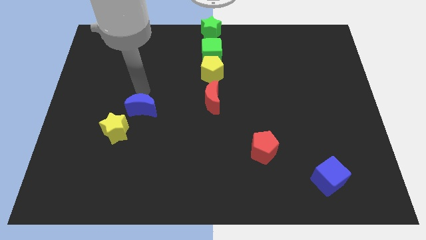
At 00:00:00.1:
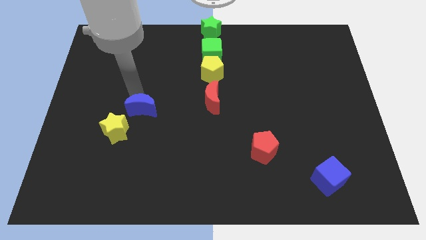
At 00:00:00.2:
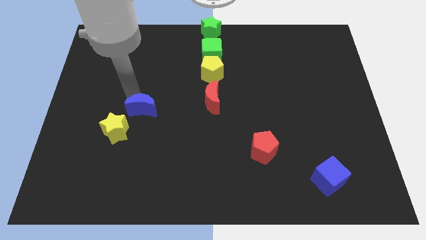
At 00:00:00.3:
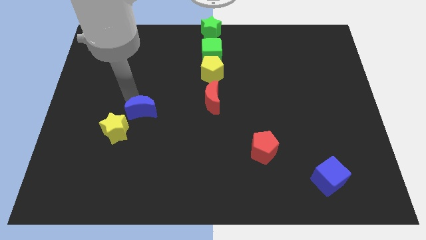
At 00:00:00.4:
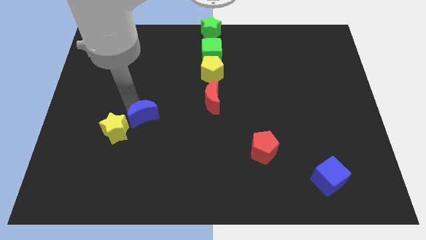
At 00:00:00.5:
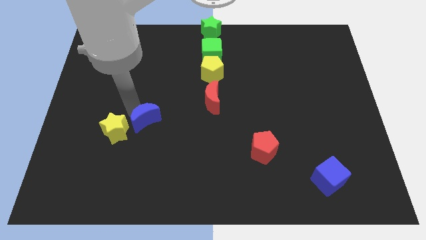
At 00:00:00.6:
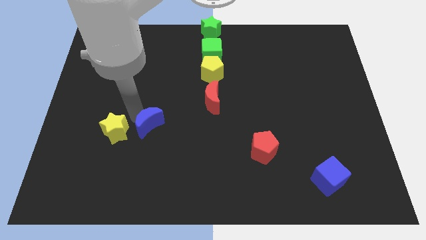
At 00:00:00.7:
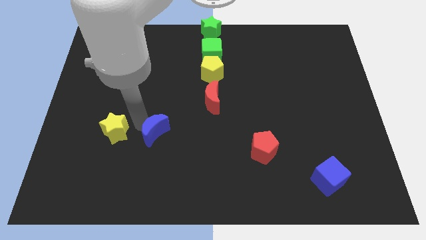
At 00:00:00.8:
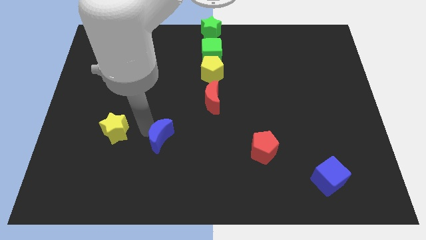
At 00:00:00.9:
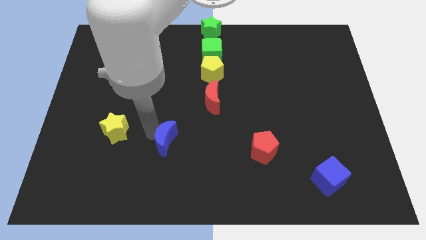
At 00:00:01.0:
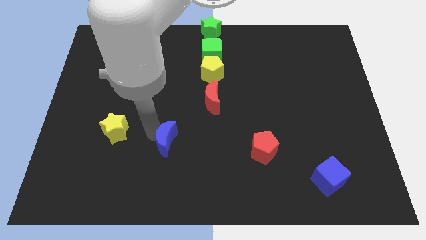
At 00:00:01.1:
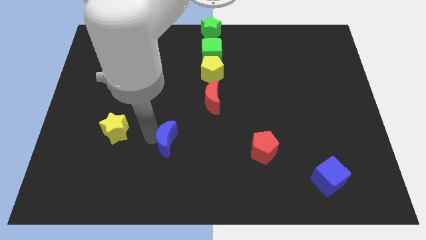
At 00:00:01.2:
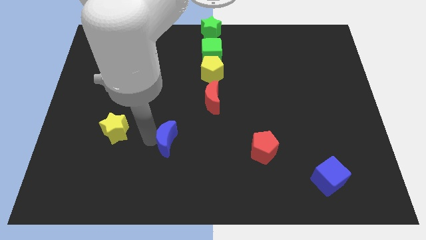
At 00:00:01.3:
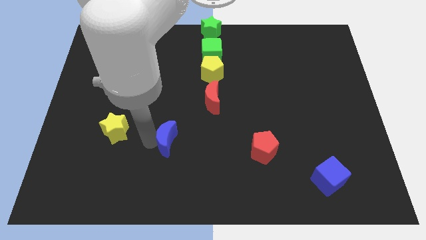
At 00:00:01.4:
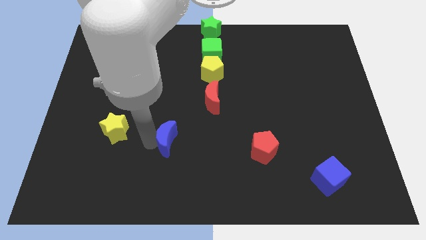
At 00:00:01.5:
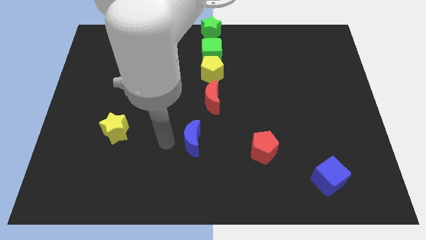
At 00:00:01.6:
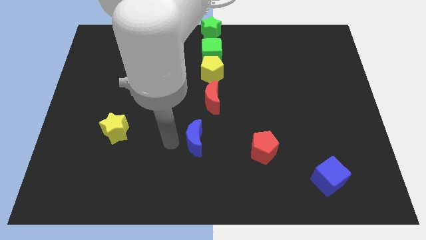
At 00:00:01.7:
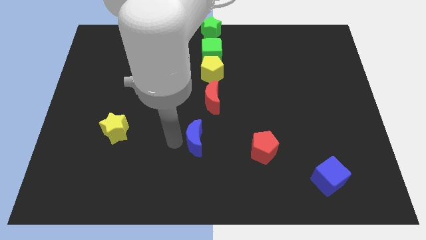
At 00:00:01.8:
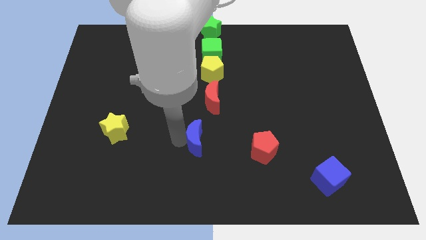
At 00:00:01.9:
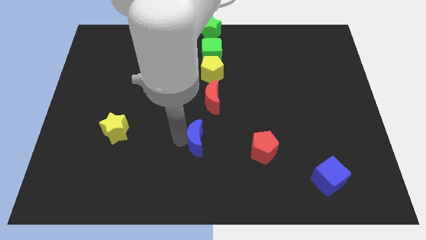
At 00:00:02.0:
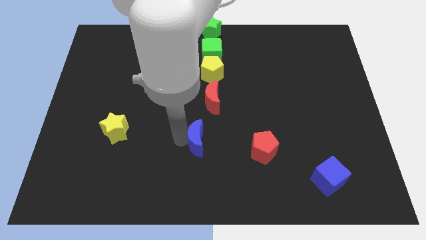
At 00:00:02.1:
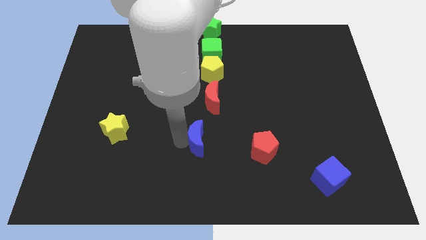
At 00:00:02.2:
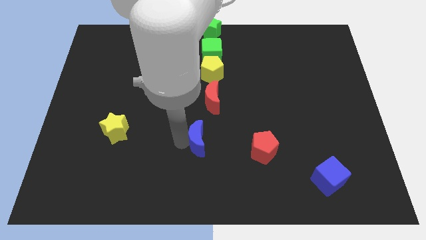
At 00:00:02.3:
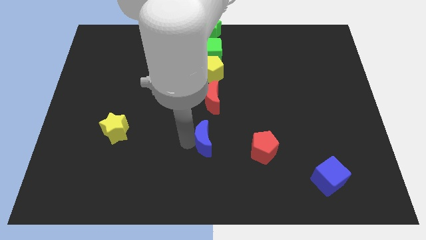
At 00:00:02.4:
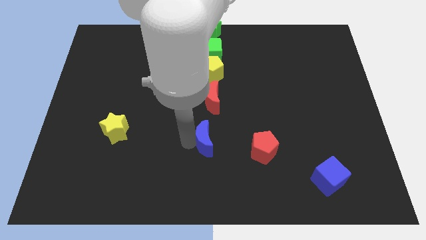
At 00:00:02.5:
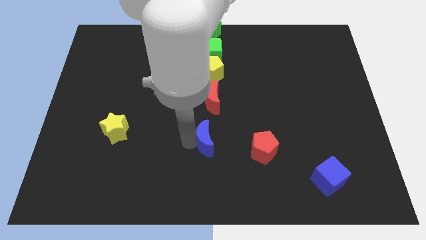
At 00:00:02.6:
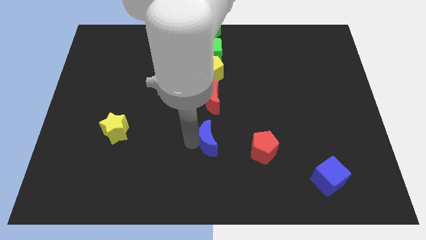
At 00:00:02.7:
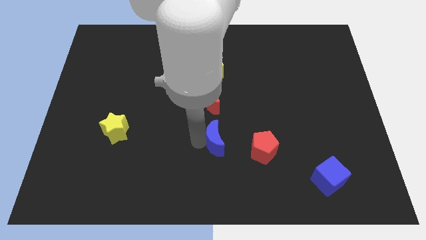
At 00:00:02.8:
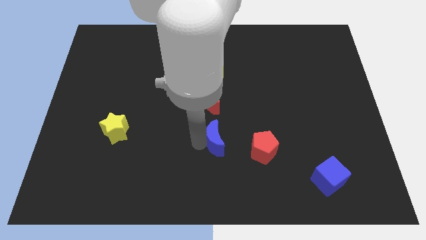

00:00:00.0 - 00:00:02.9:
move the blue moon below the red moon vertically

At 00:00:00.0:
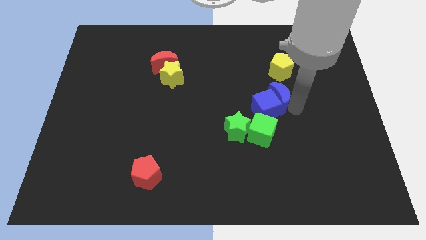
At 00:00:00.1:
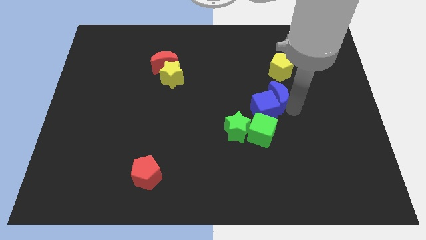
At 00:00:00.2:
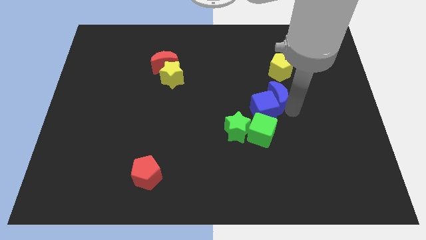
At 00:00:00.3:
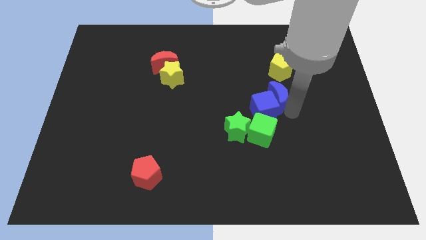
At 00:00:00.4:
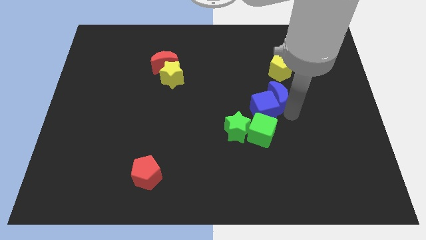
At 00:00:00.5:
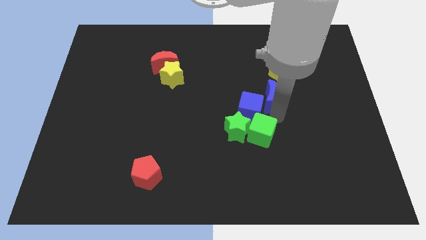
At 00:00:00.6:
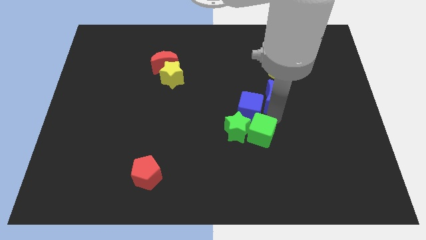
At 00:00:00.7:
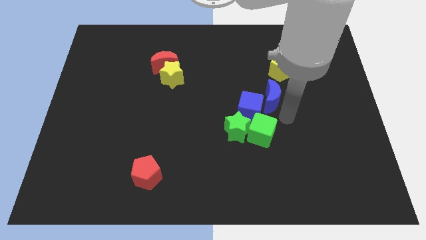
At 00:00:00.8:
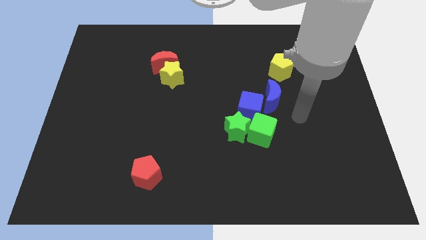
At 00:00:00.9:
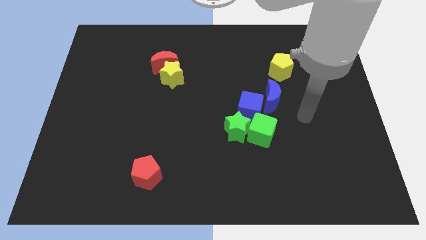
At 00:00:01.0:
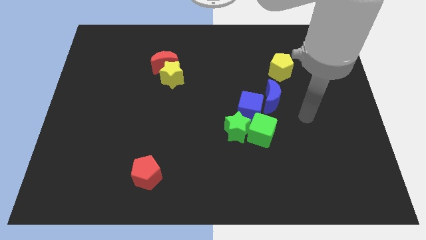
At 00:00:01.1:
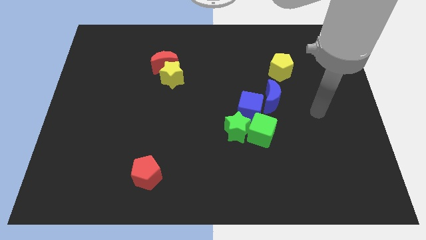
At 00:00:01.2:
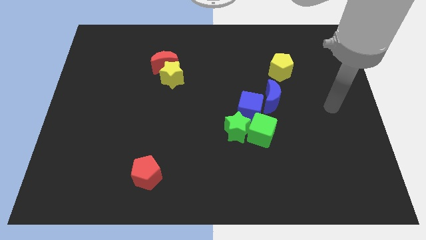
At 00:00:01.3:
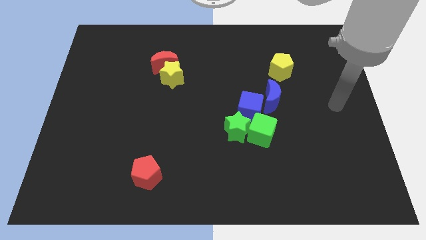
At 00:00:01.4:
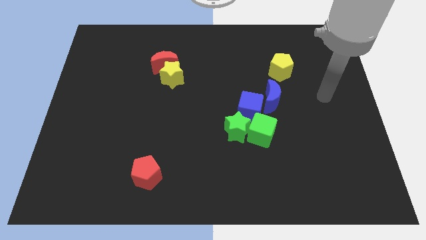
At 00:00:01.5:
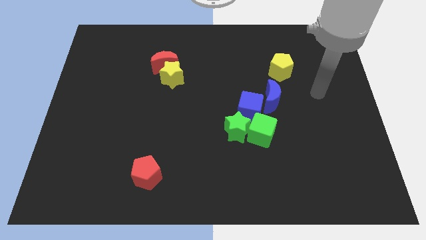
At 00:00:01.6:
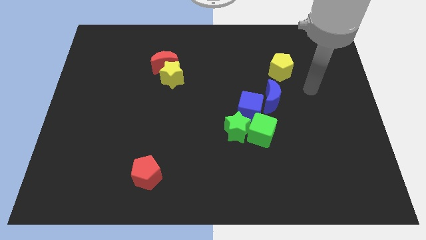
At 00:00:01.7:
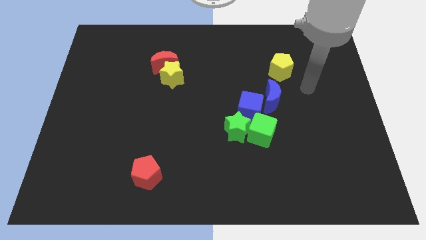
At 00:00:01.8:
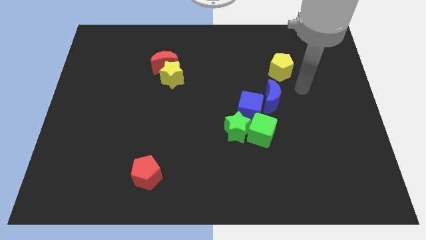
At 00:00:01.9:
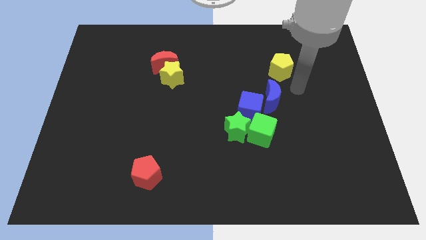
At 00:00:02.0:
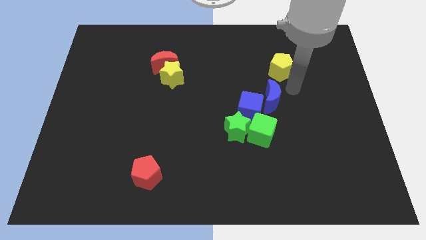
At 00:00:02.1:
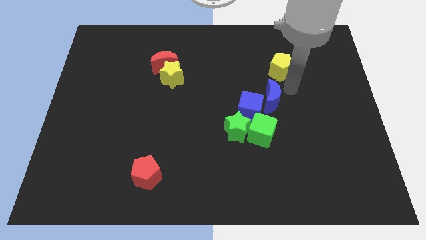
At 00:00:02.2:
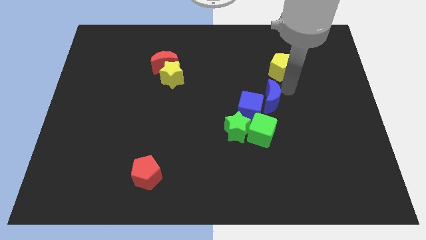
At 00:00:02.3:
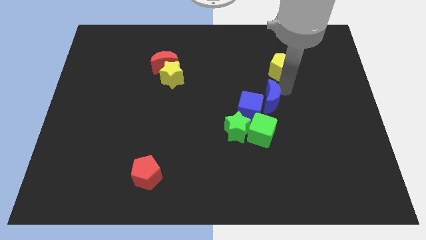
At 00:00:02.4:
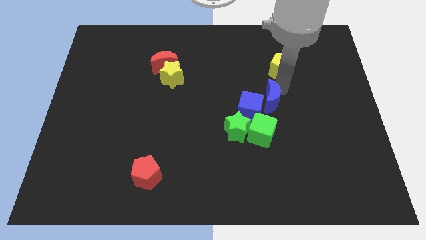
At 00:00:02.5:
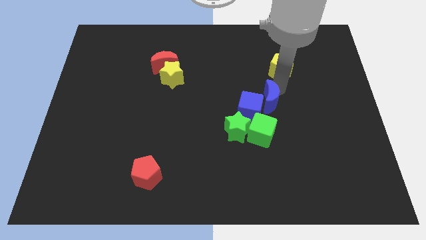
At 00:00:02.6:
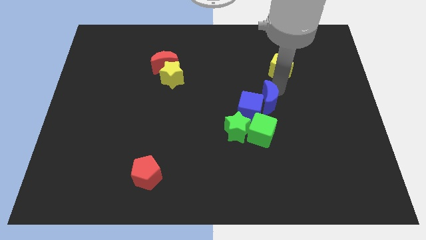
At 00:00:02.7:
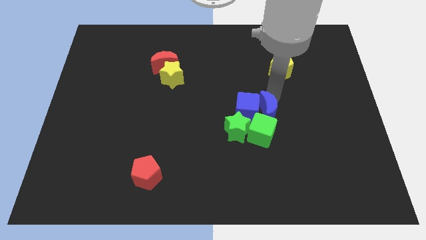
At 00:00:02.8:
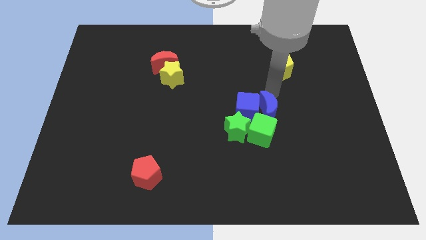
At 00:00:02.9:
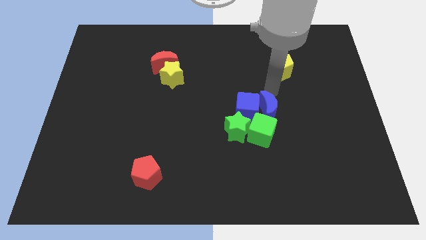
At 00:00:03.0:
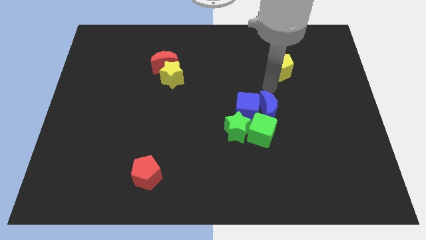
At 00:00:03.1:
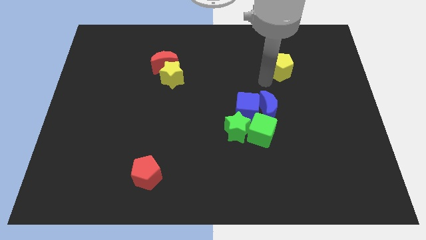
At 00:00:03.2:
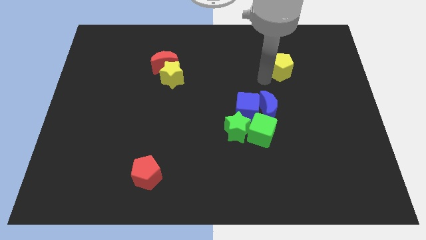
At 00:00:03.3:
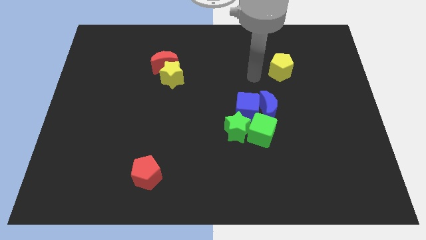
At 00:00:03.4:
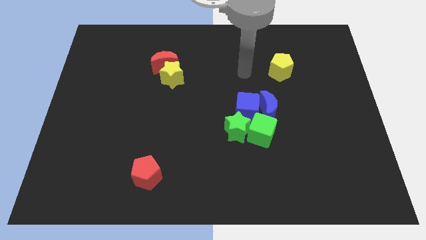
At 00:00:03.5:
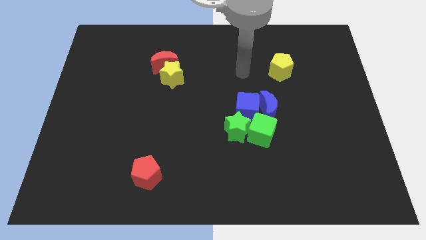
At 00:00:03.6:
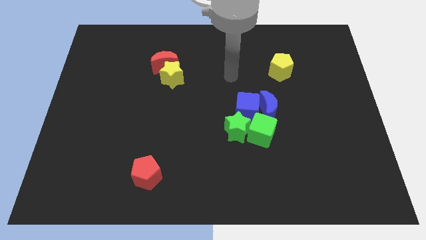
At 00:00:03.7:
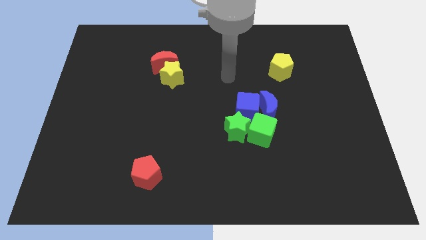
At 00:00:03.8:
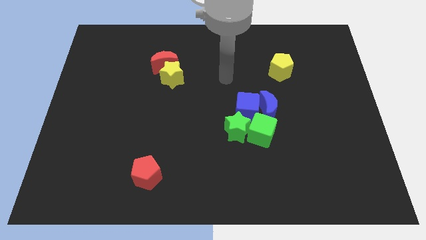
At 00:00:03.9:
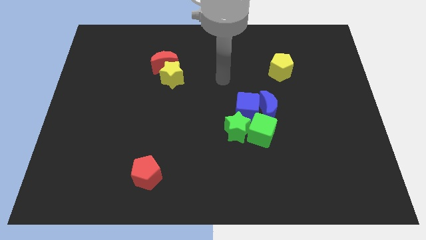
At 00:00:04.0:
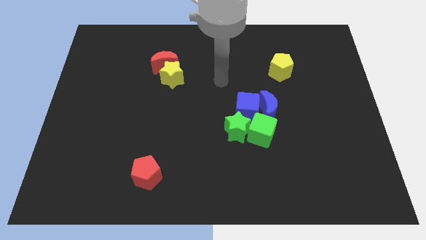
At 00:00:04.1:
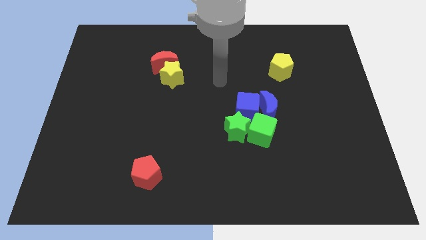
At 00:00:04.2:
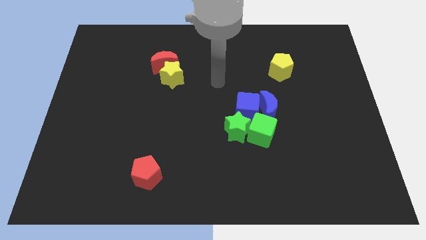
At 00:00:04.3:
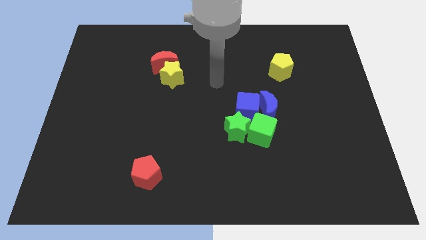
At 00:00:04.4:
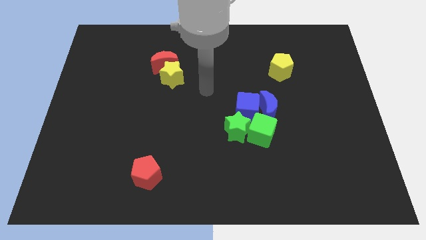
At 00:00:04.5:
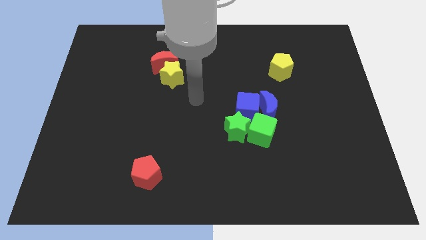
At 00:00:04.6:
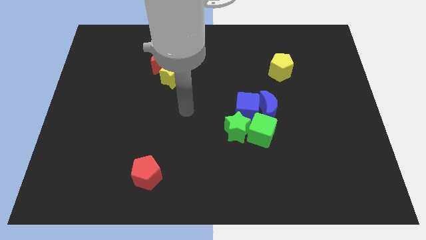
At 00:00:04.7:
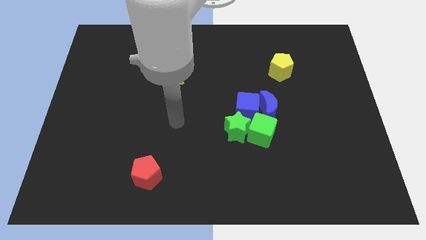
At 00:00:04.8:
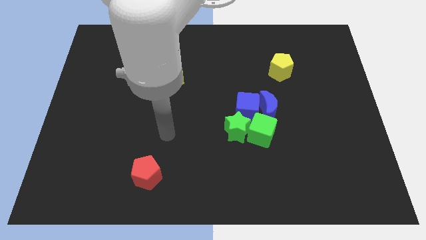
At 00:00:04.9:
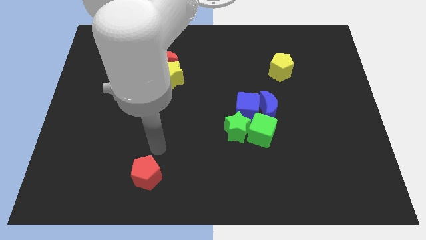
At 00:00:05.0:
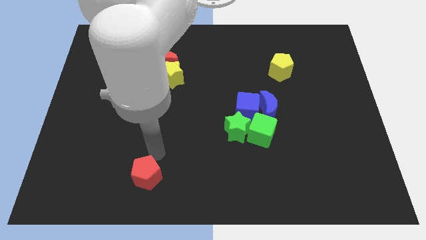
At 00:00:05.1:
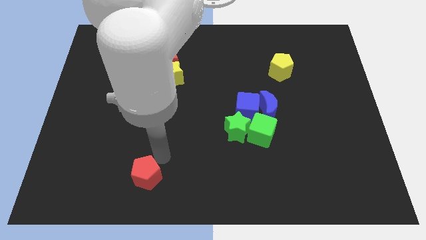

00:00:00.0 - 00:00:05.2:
move the blue moon and blue cube into green blocks

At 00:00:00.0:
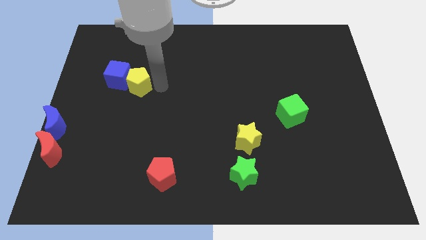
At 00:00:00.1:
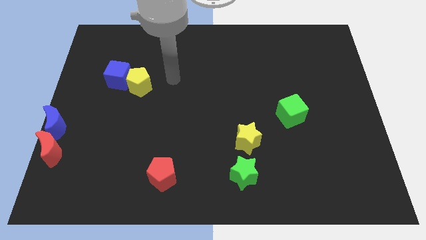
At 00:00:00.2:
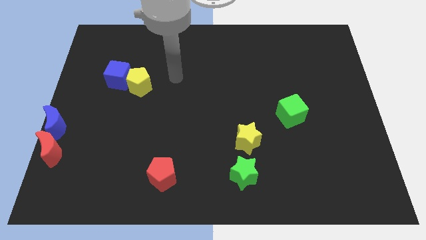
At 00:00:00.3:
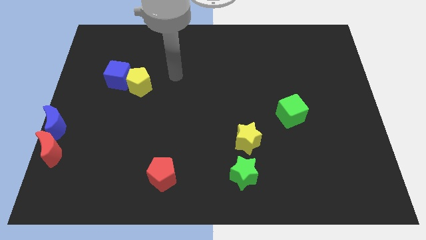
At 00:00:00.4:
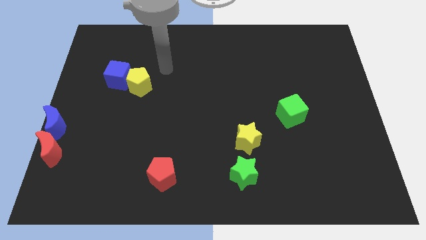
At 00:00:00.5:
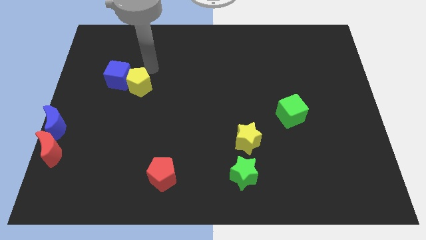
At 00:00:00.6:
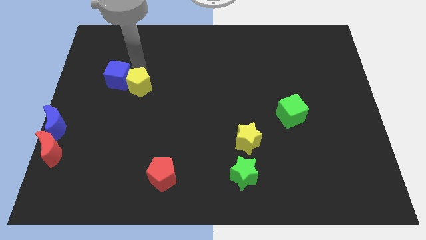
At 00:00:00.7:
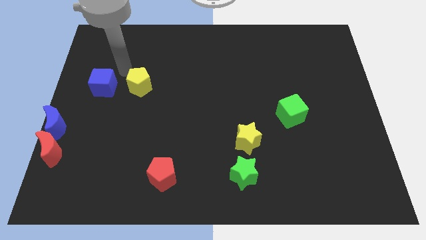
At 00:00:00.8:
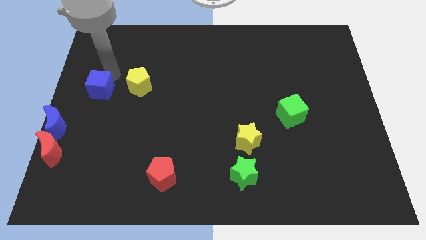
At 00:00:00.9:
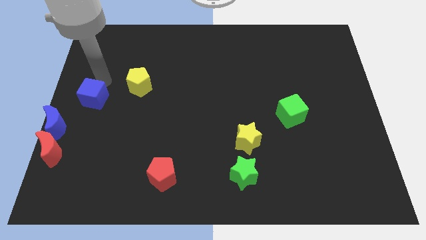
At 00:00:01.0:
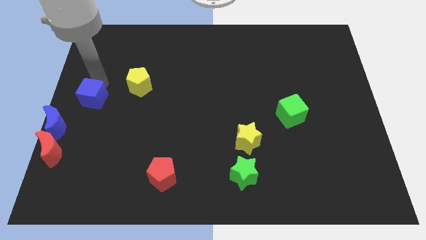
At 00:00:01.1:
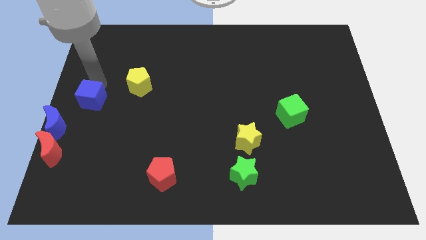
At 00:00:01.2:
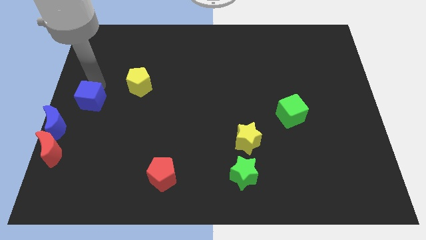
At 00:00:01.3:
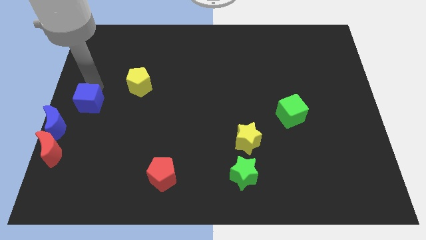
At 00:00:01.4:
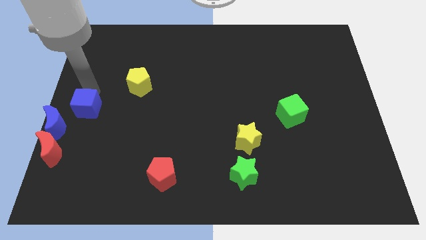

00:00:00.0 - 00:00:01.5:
separate the blue cube from the yellow pentagon
